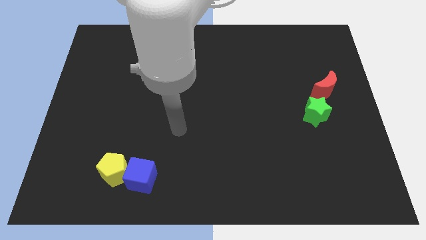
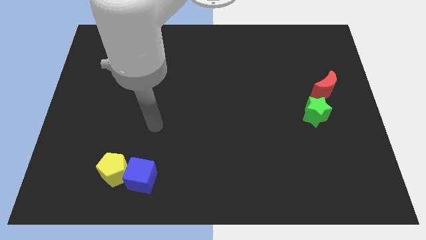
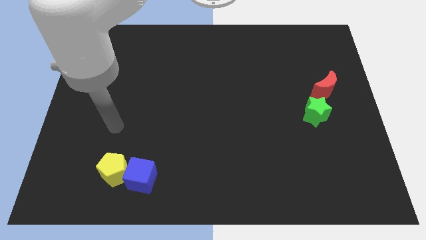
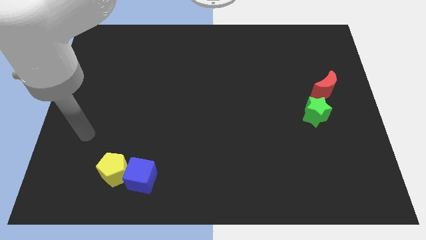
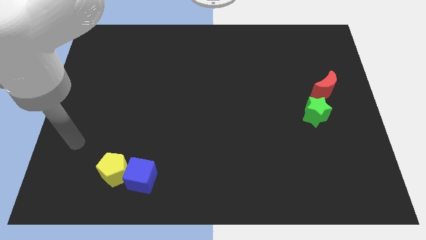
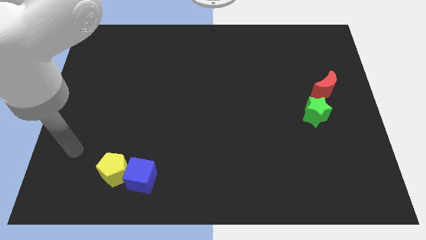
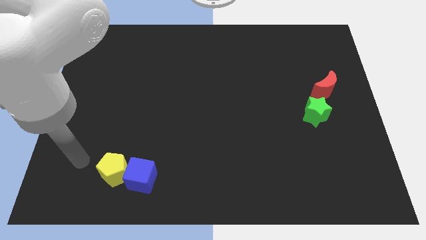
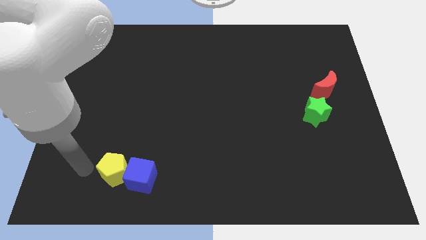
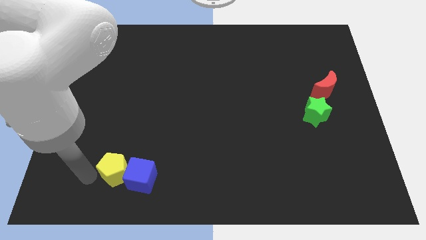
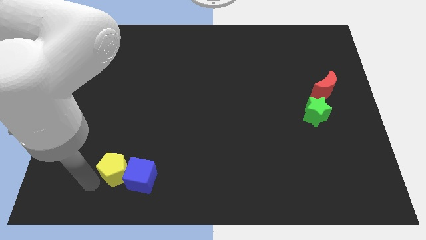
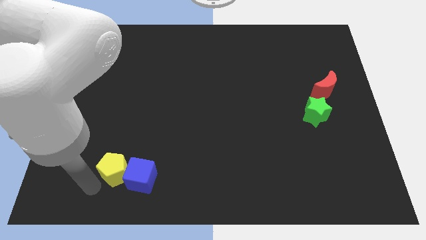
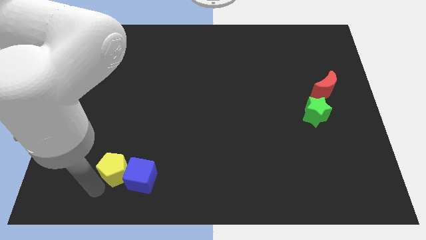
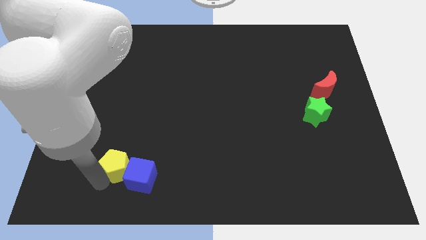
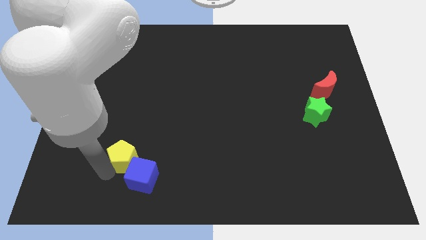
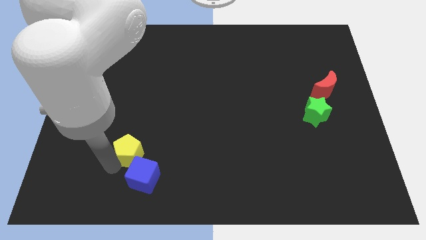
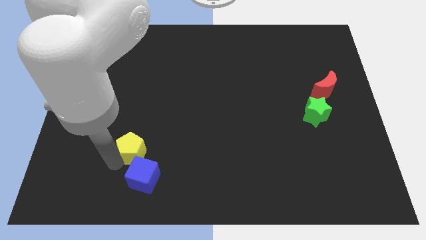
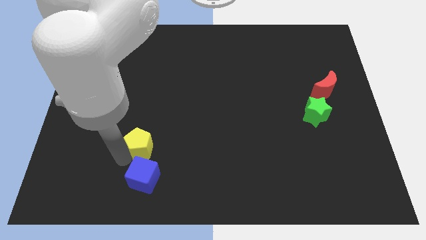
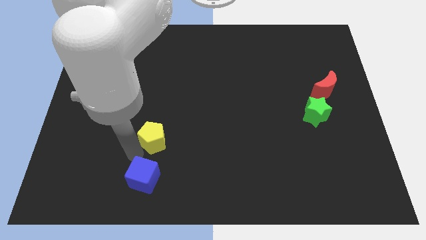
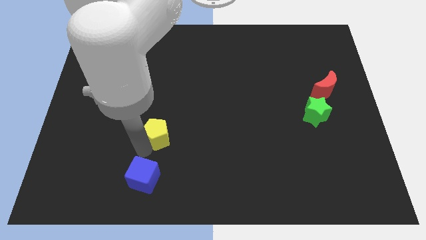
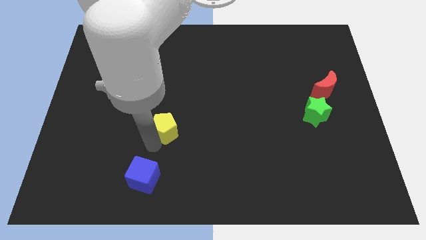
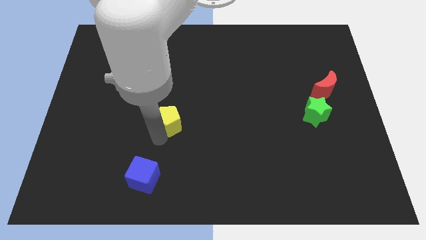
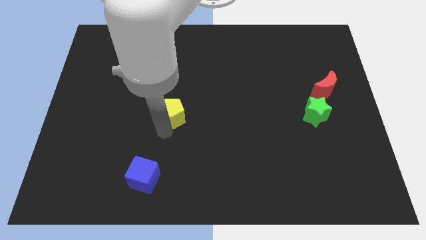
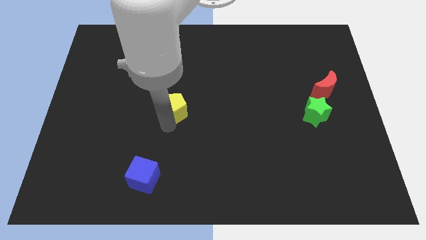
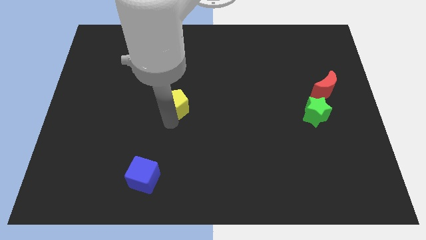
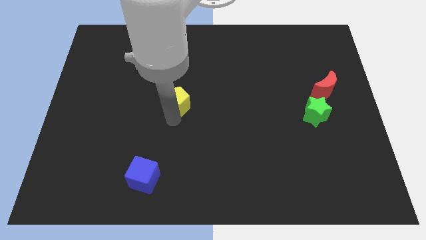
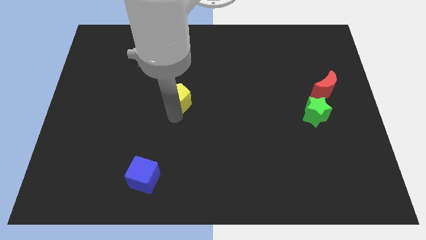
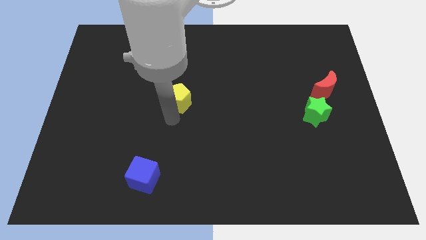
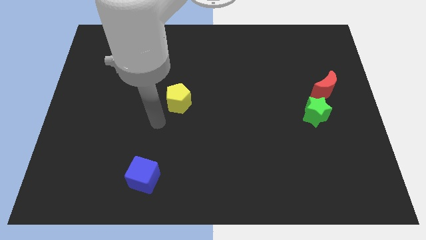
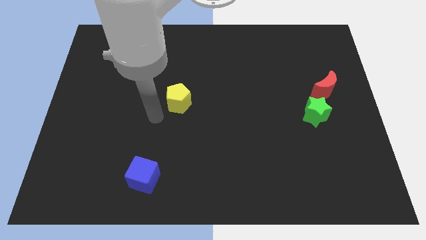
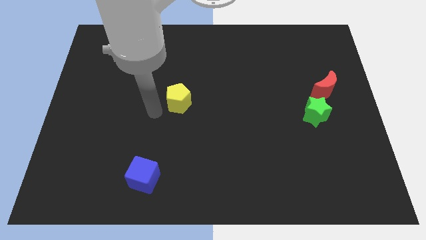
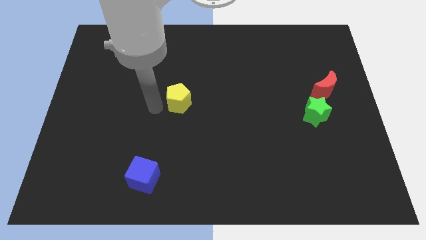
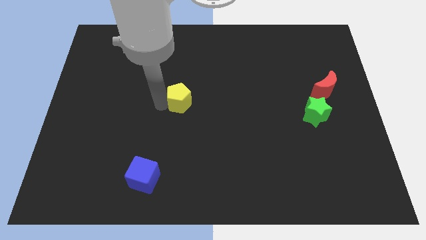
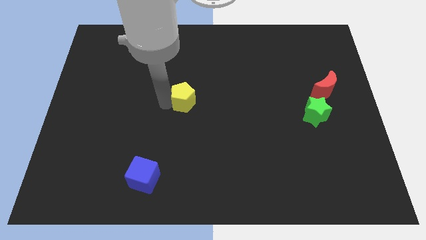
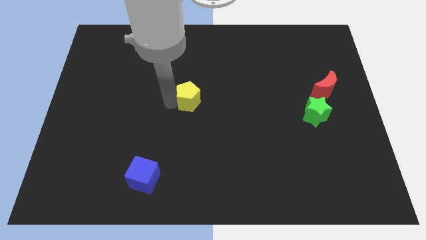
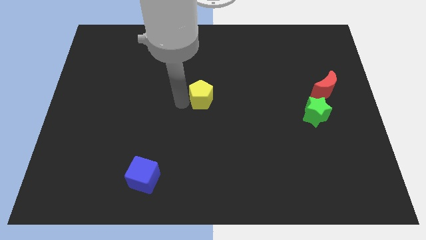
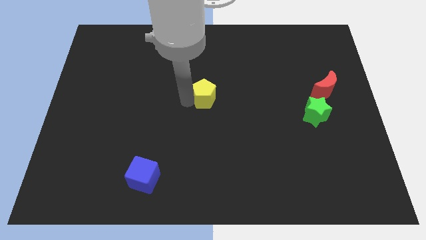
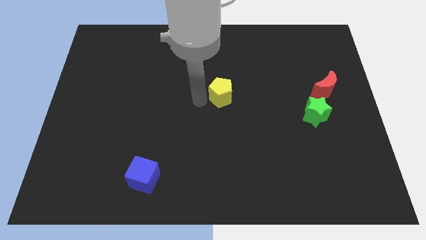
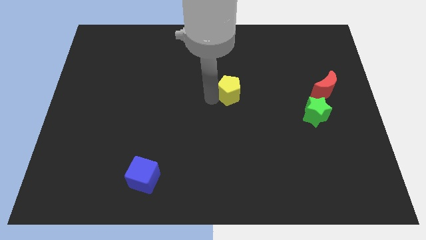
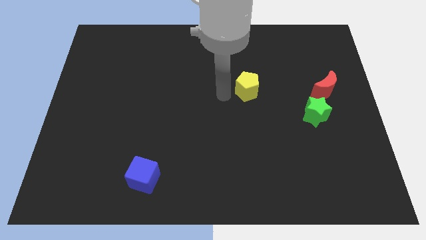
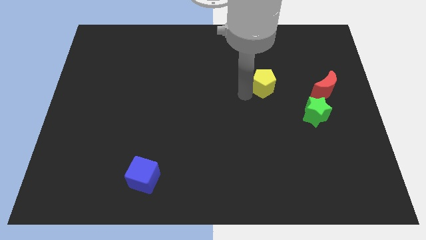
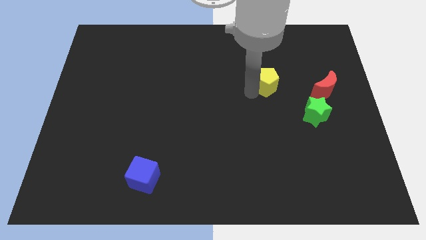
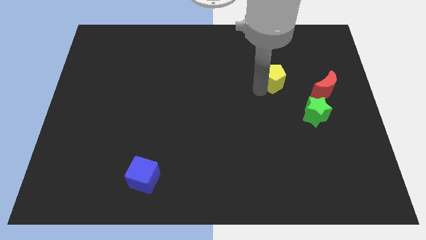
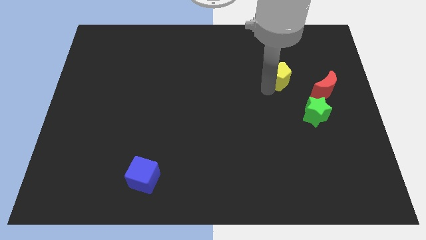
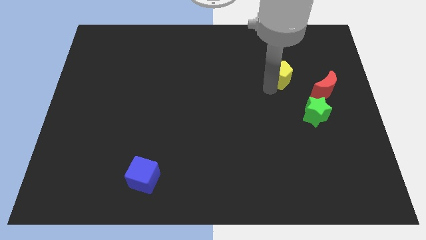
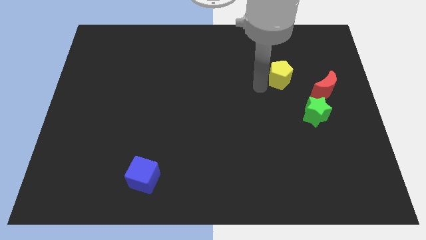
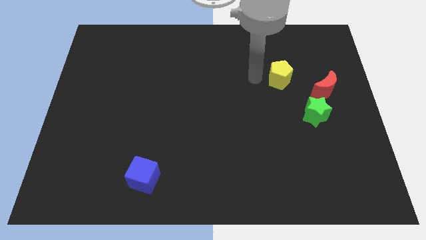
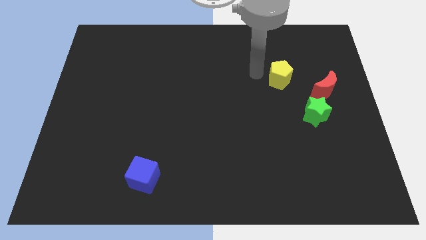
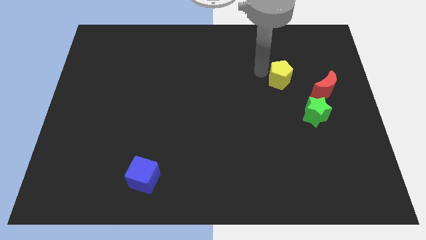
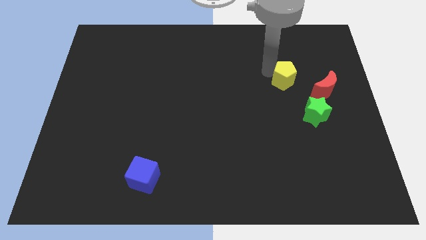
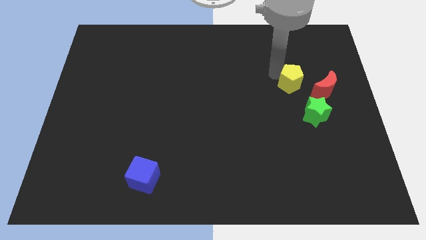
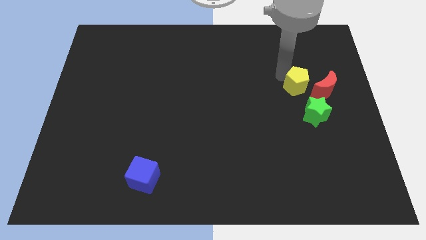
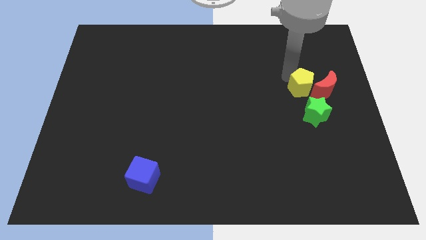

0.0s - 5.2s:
push the yellow pentagon to the red block

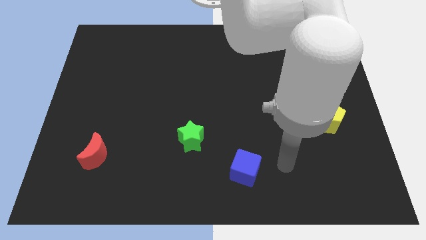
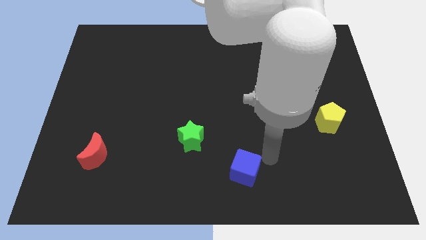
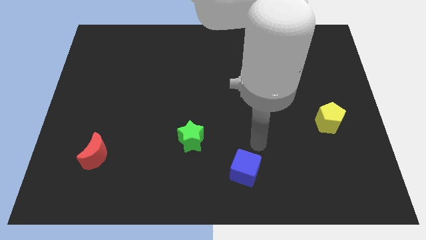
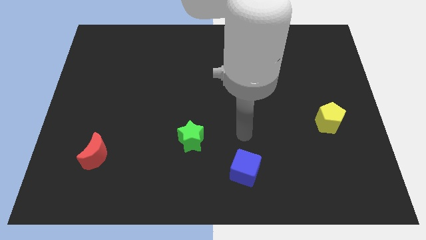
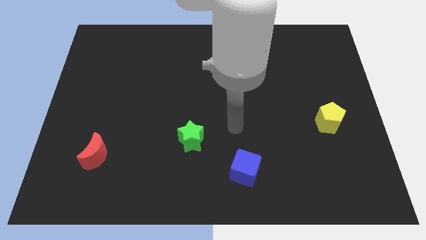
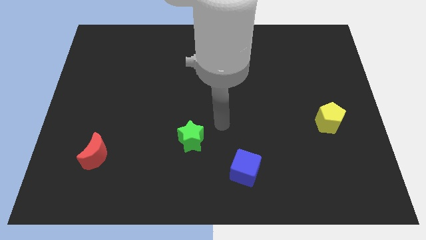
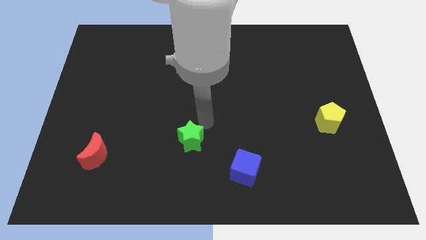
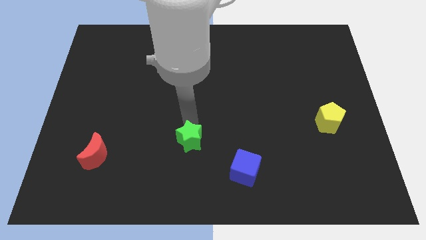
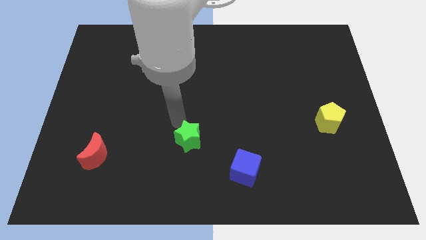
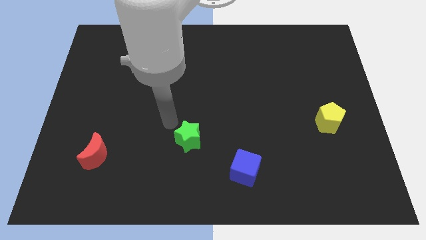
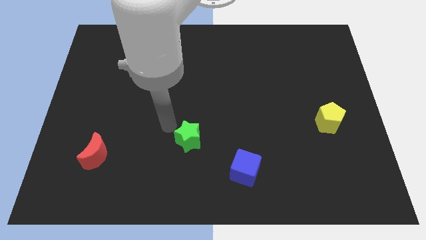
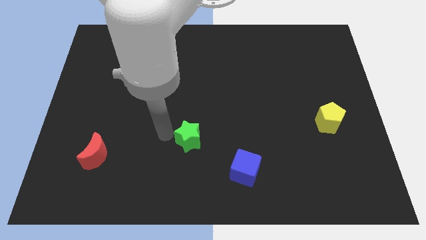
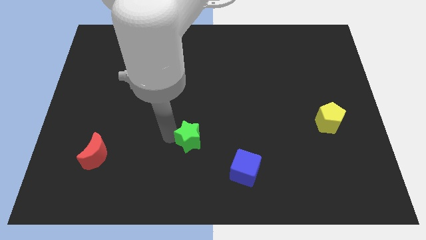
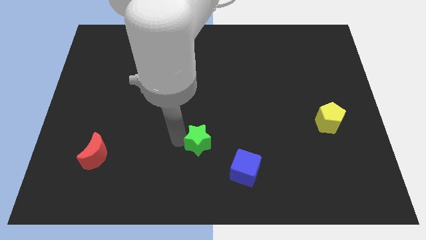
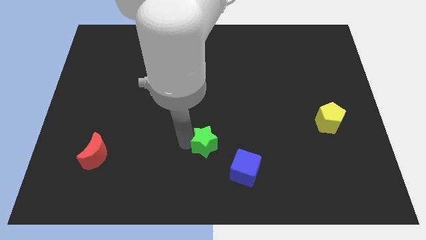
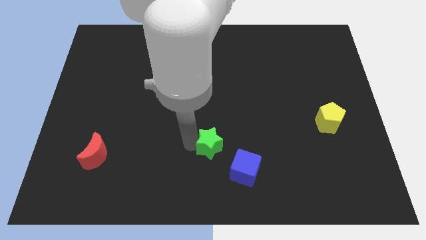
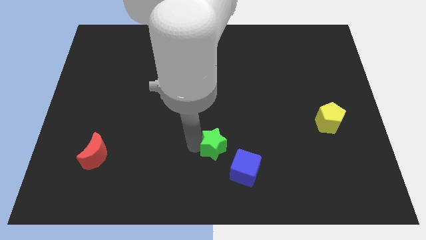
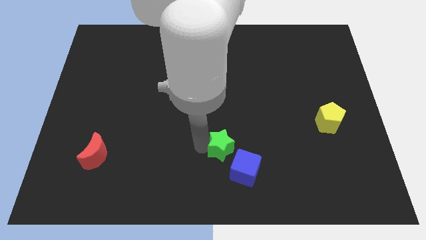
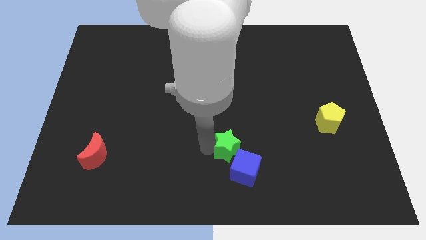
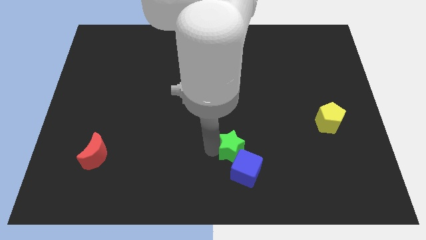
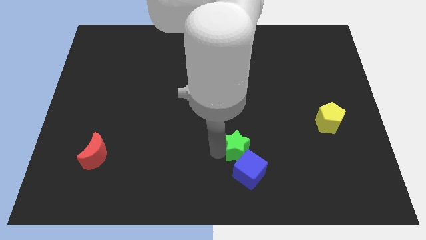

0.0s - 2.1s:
put the star towards the blue block

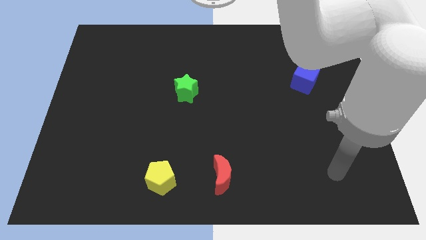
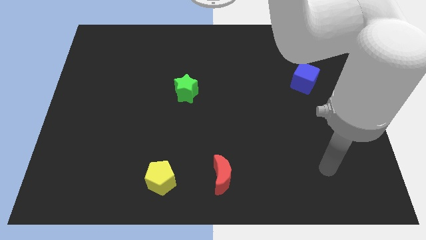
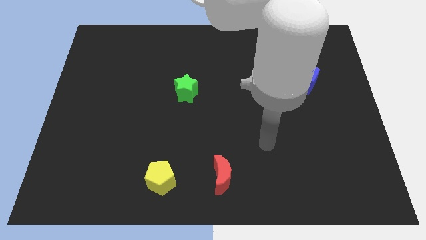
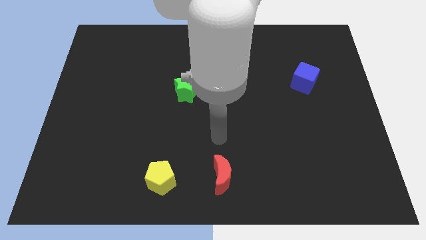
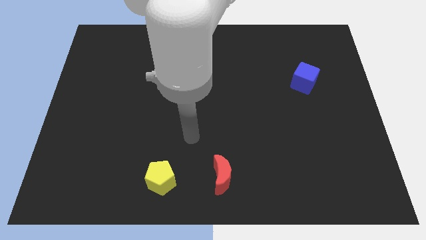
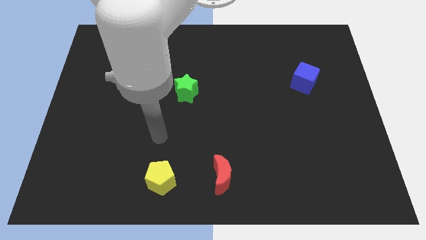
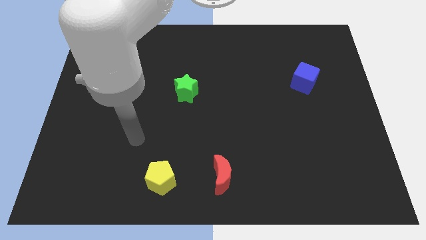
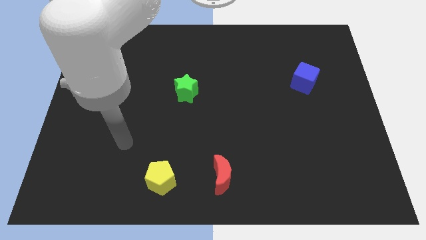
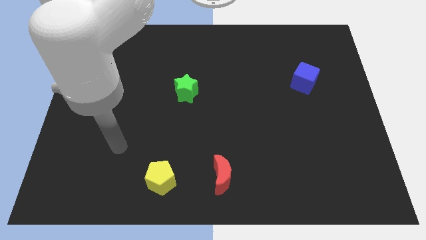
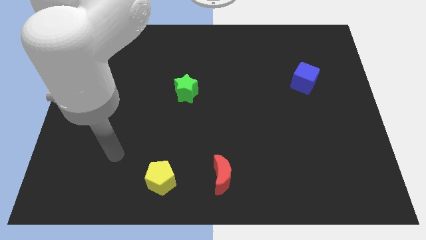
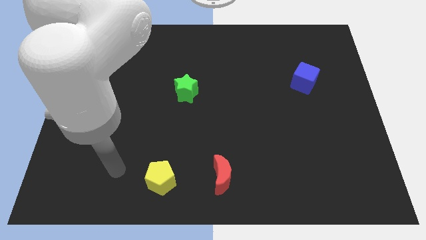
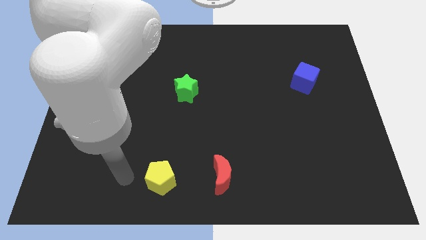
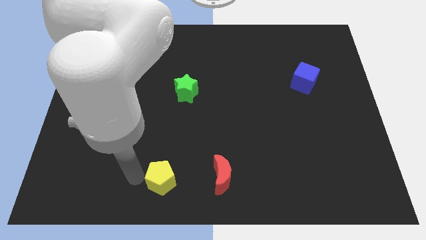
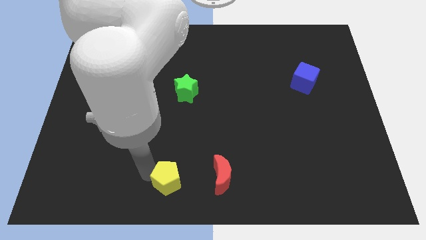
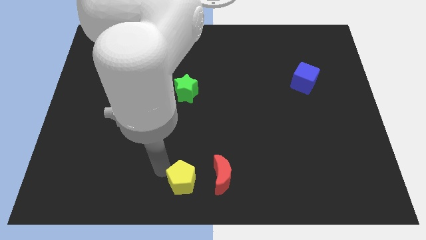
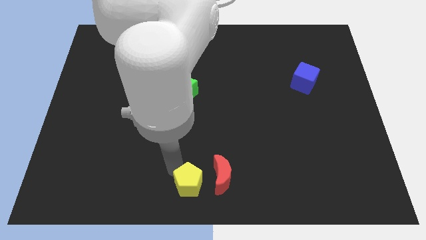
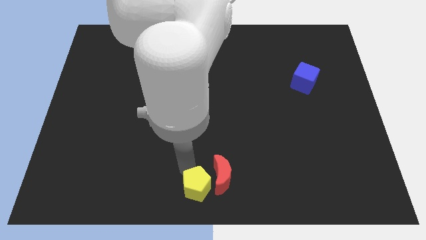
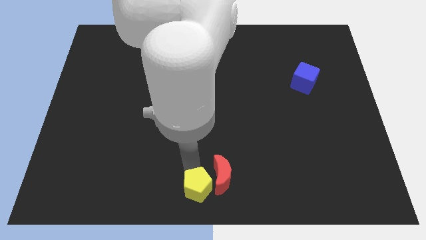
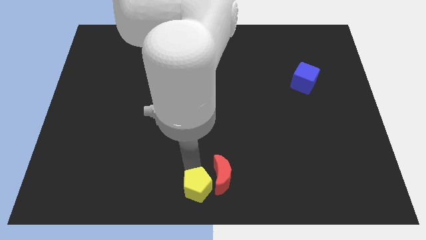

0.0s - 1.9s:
put the yellow block next to the moon
